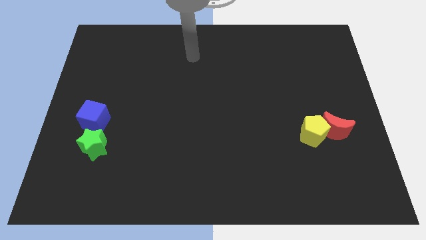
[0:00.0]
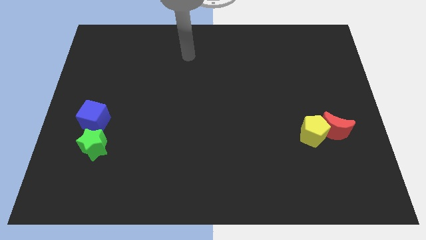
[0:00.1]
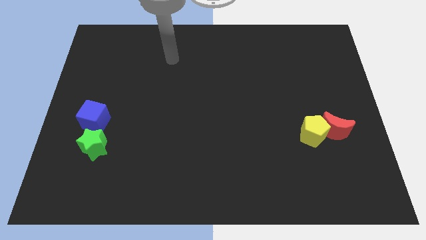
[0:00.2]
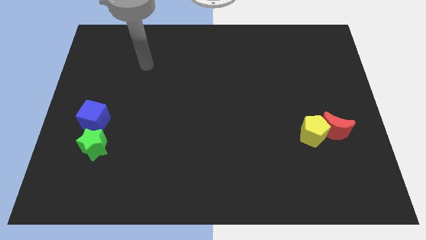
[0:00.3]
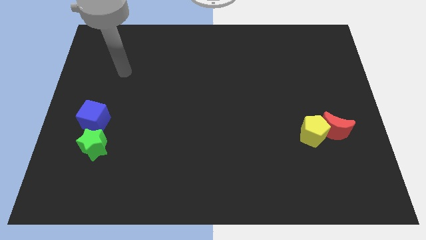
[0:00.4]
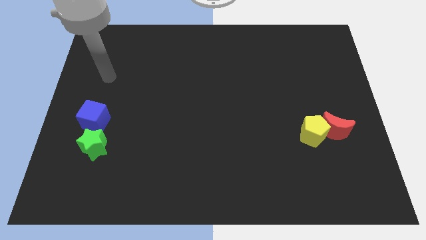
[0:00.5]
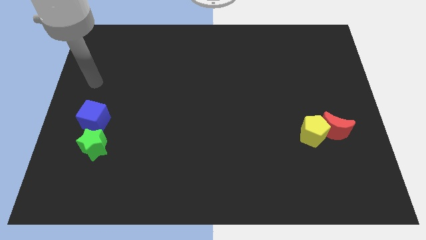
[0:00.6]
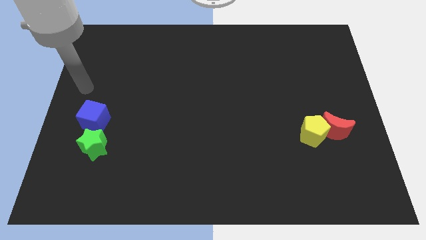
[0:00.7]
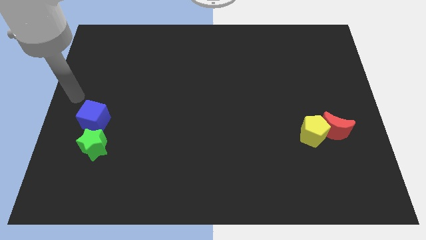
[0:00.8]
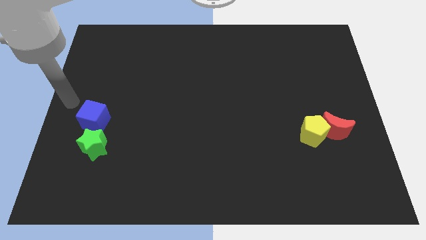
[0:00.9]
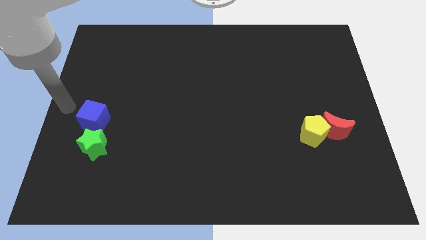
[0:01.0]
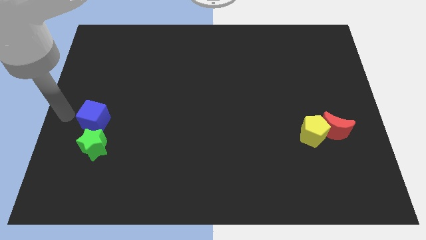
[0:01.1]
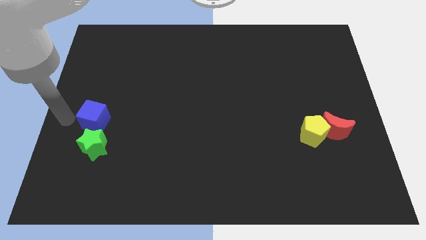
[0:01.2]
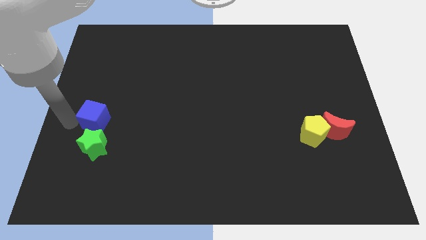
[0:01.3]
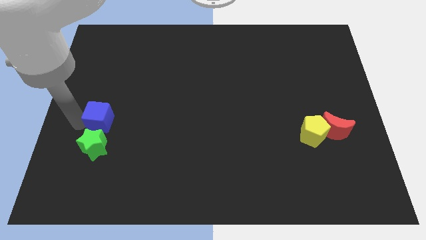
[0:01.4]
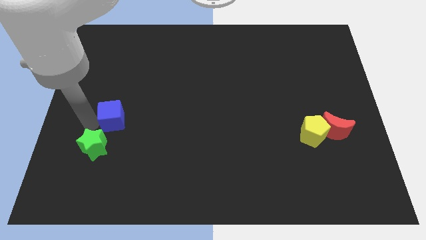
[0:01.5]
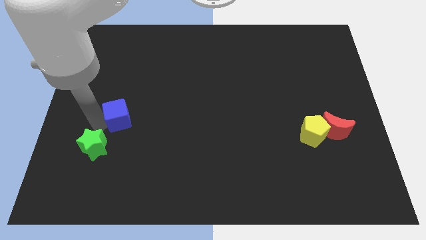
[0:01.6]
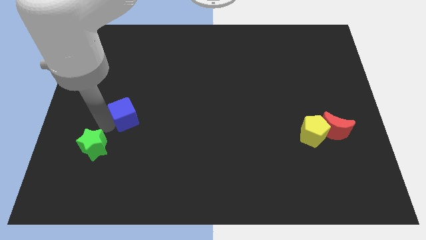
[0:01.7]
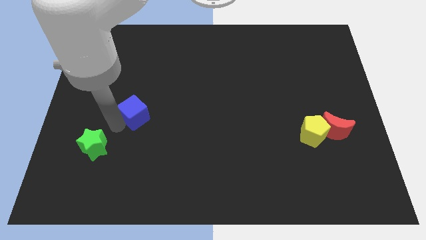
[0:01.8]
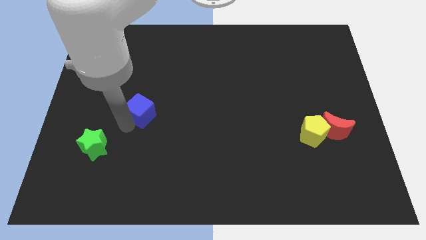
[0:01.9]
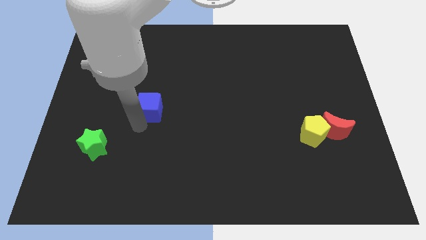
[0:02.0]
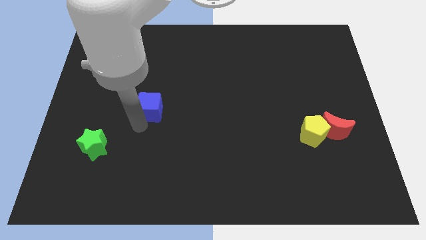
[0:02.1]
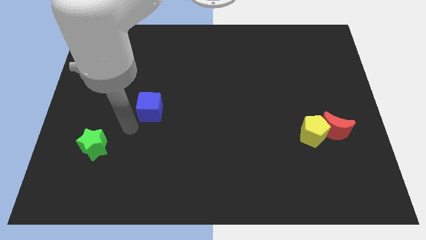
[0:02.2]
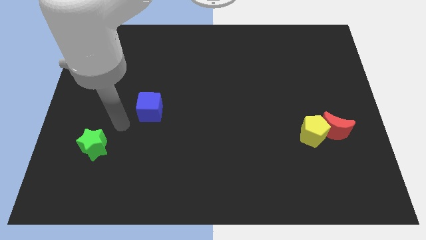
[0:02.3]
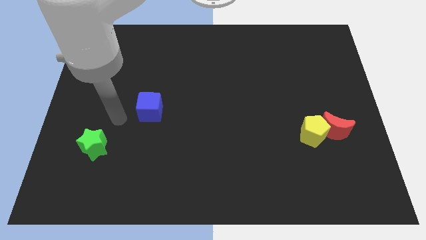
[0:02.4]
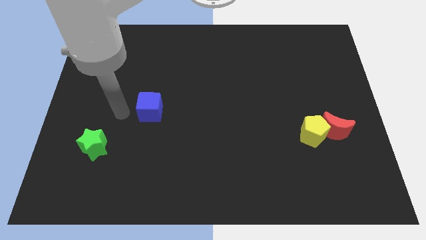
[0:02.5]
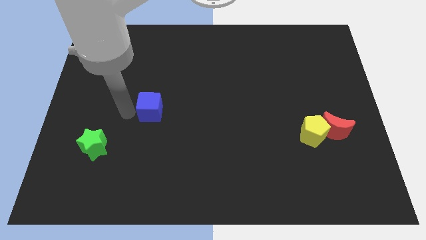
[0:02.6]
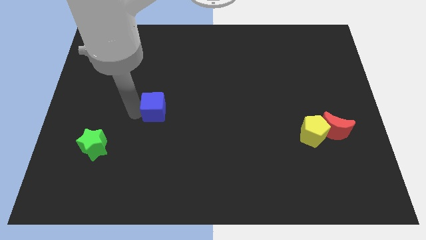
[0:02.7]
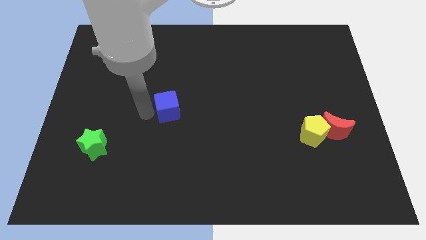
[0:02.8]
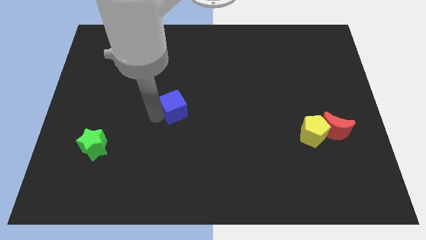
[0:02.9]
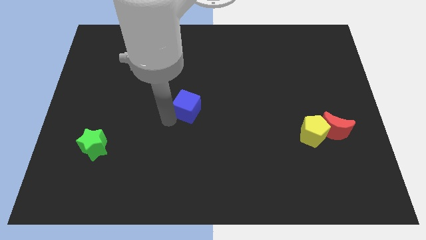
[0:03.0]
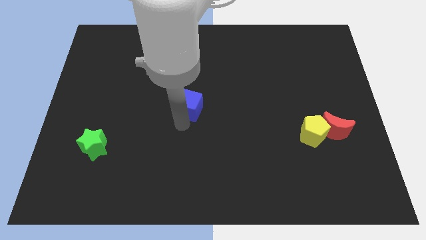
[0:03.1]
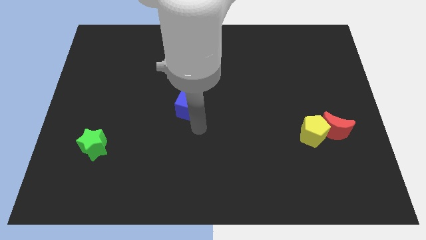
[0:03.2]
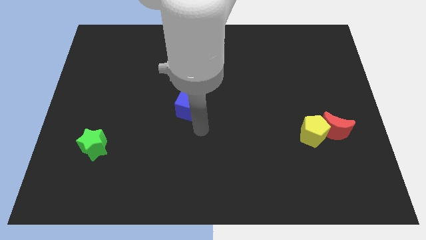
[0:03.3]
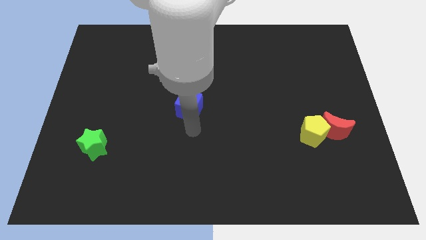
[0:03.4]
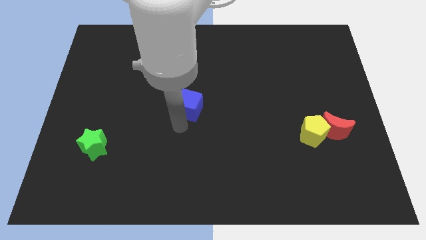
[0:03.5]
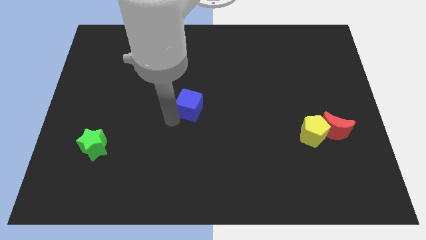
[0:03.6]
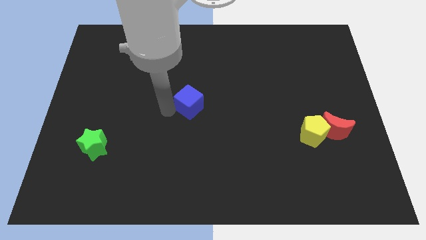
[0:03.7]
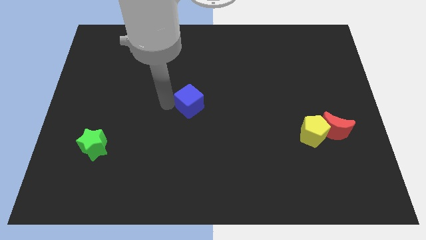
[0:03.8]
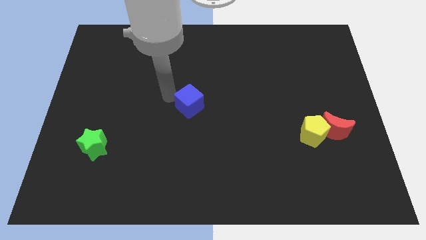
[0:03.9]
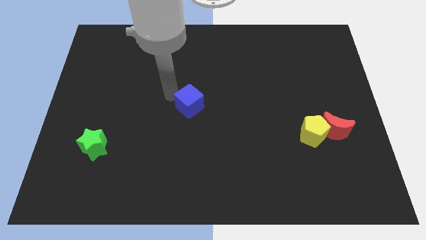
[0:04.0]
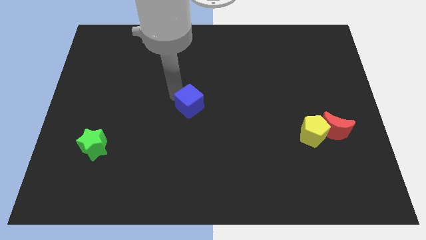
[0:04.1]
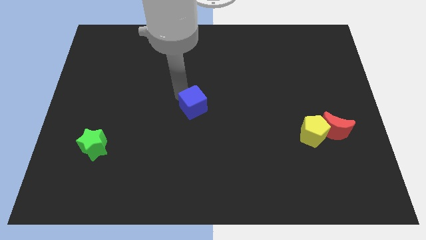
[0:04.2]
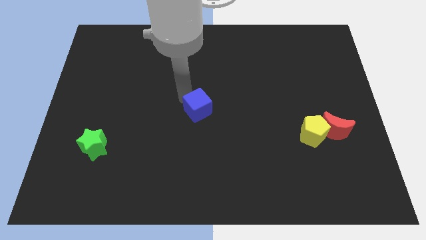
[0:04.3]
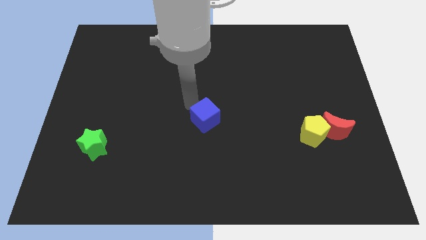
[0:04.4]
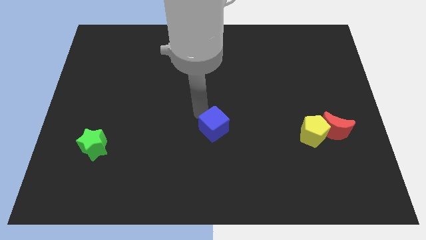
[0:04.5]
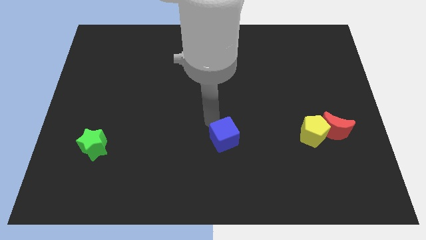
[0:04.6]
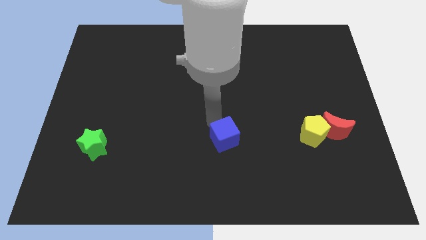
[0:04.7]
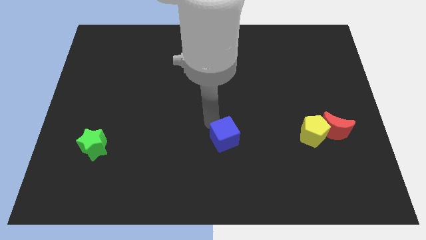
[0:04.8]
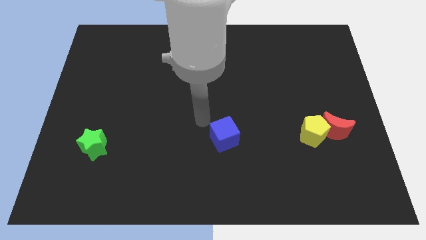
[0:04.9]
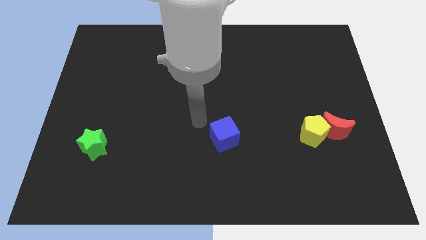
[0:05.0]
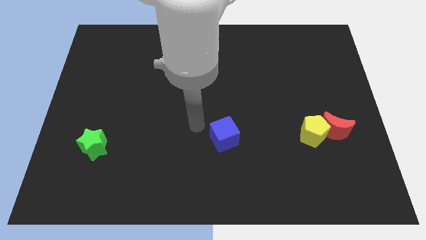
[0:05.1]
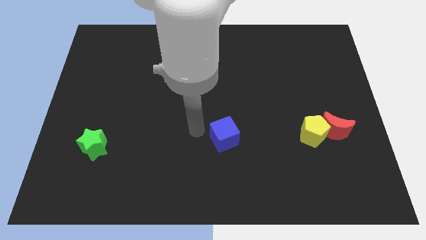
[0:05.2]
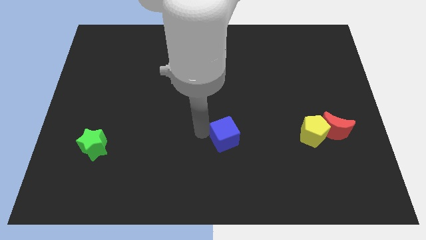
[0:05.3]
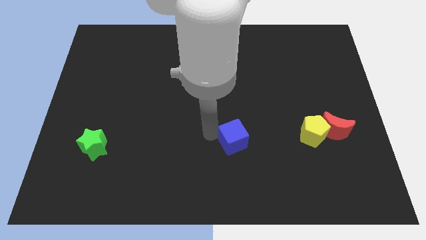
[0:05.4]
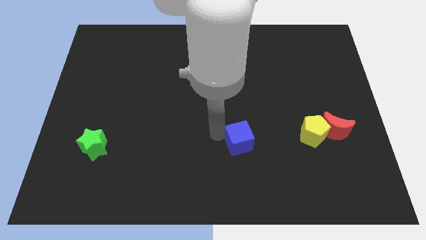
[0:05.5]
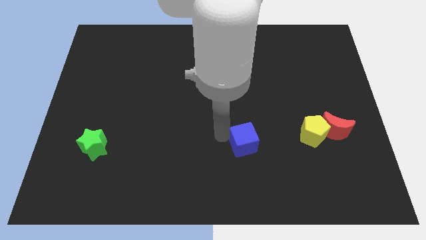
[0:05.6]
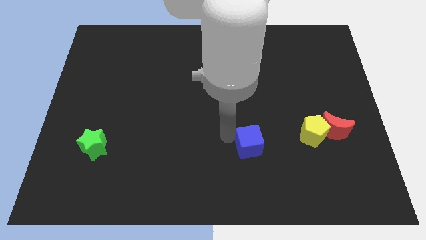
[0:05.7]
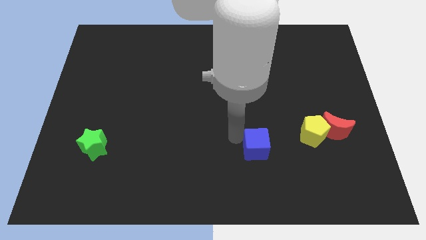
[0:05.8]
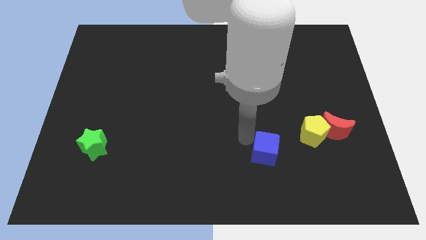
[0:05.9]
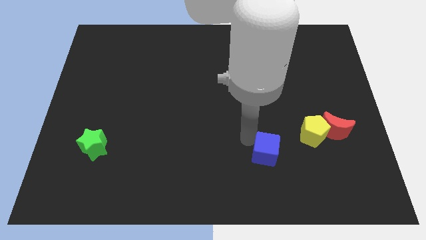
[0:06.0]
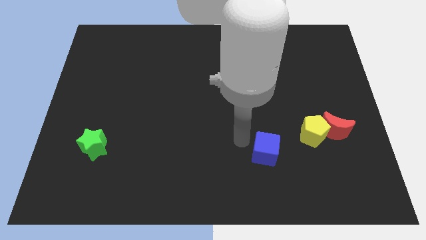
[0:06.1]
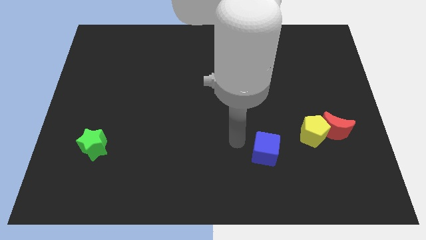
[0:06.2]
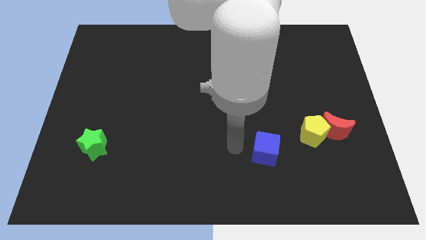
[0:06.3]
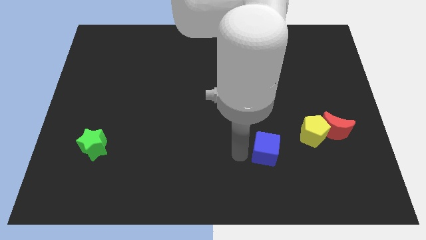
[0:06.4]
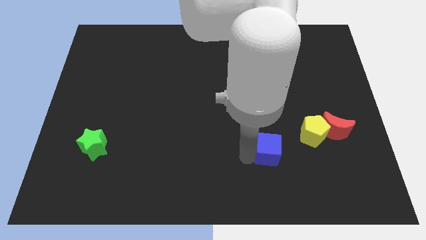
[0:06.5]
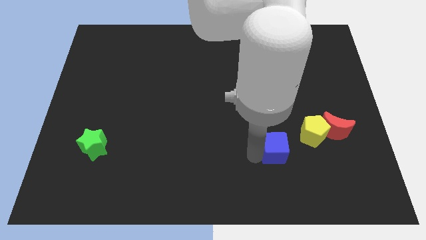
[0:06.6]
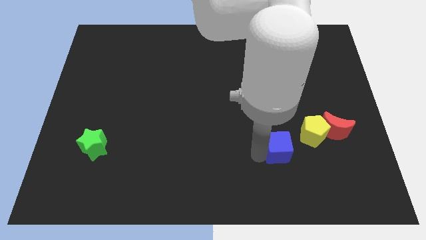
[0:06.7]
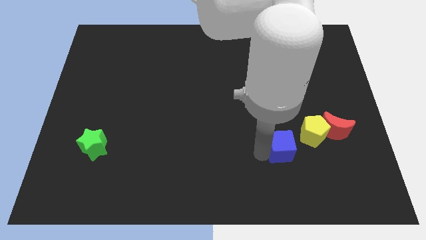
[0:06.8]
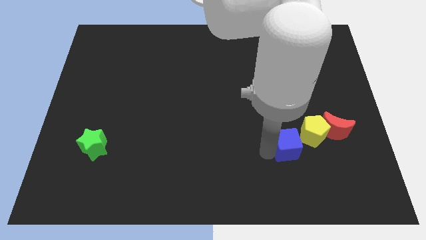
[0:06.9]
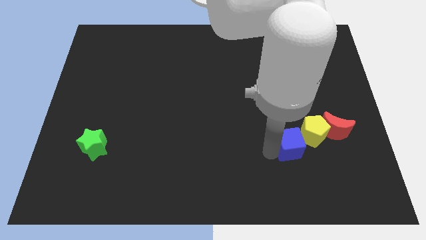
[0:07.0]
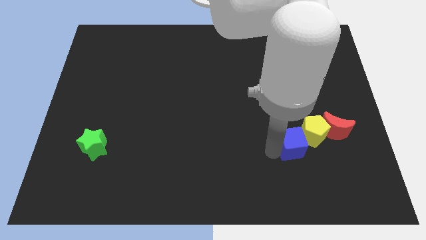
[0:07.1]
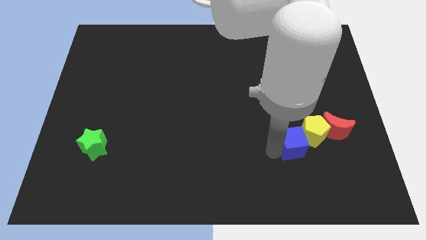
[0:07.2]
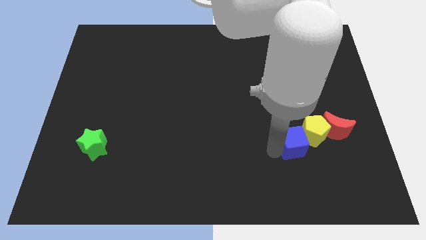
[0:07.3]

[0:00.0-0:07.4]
push the cube close to the yellow block

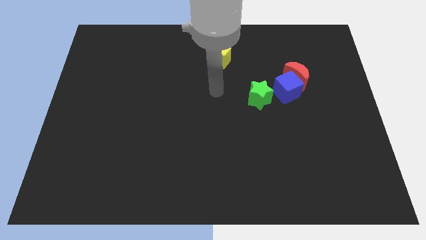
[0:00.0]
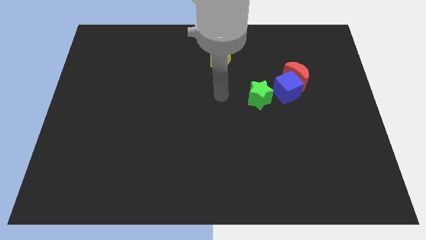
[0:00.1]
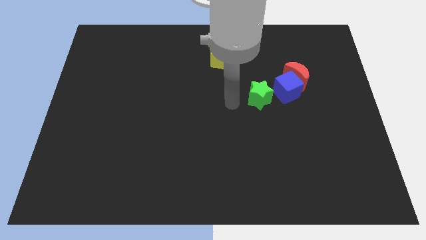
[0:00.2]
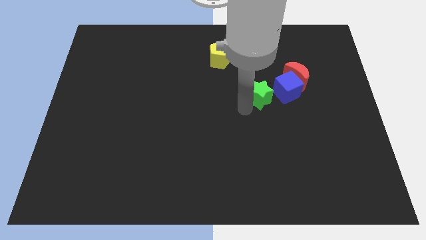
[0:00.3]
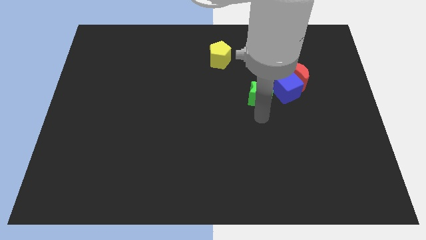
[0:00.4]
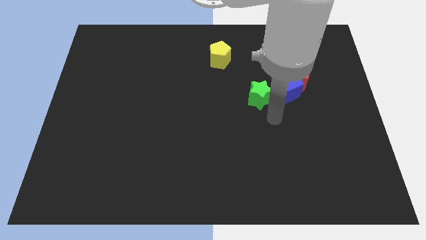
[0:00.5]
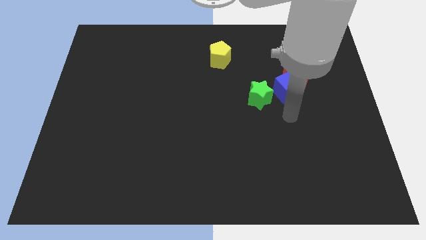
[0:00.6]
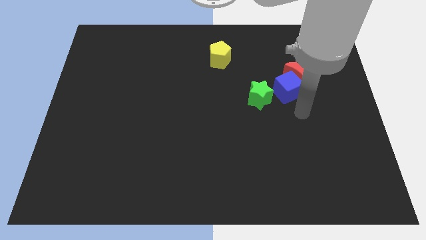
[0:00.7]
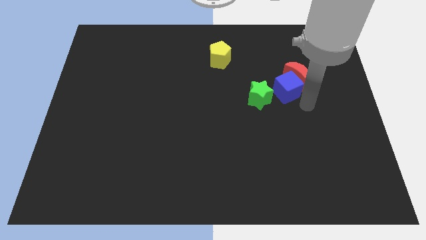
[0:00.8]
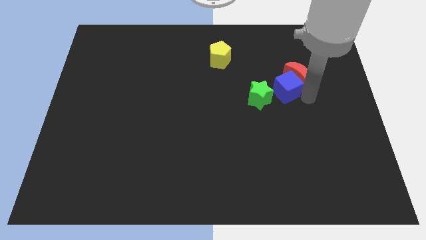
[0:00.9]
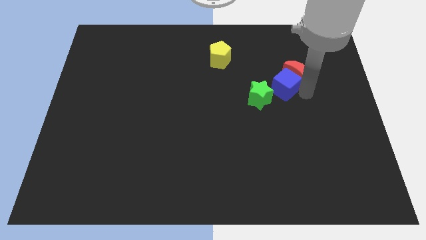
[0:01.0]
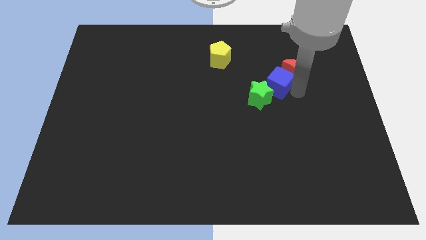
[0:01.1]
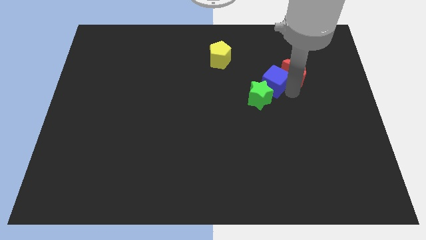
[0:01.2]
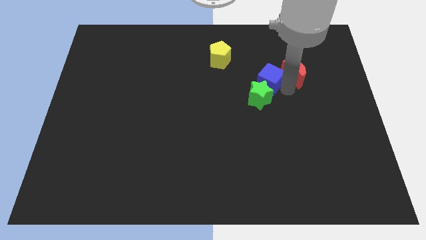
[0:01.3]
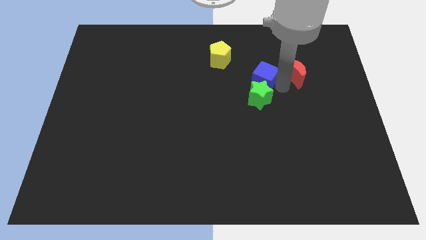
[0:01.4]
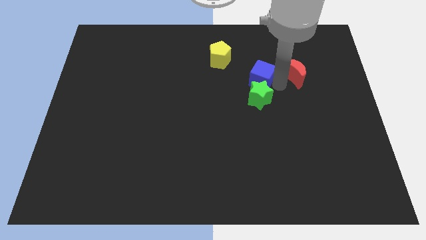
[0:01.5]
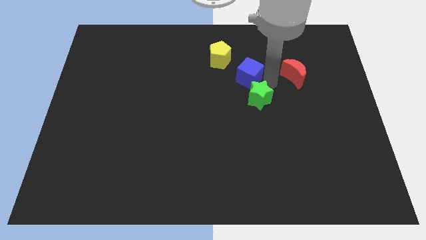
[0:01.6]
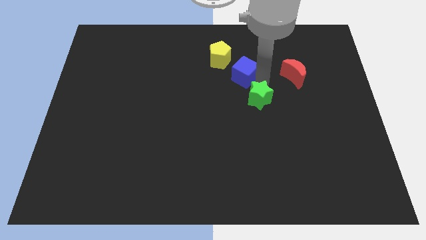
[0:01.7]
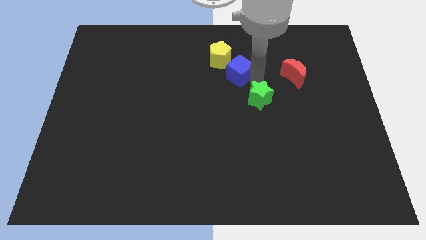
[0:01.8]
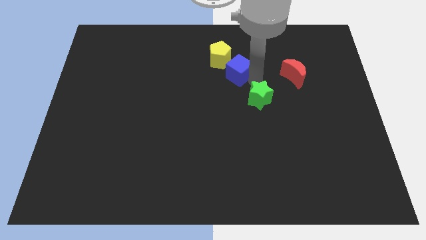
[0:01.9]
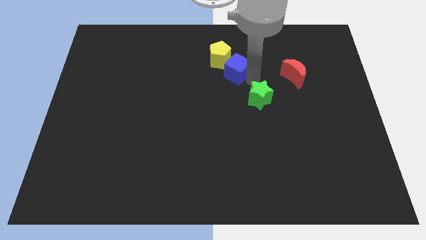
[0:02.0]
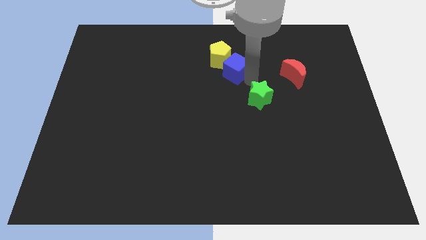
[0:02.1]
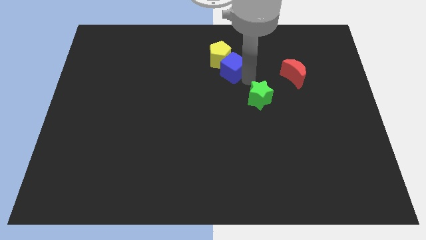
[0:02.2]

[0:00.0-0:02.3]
slide the blue block towards the pentagon
